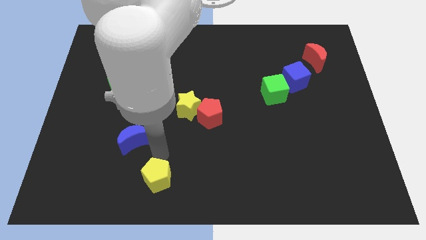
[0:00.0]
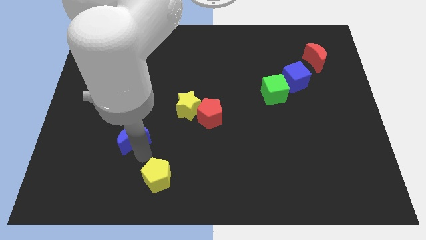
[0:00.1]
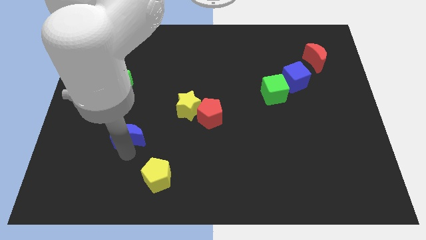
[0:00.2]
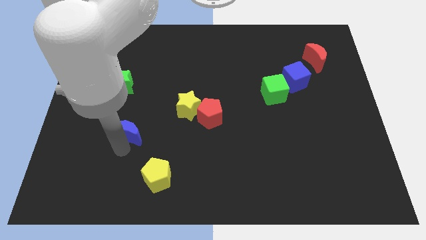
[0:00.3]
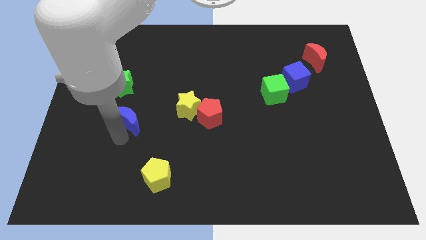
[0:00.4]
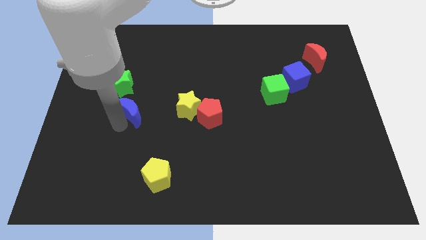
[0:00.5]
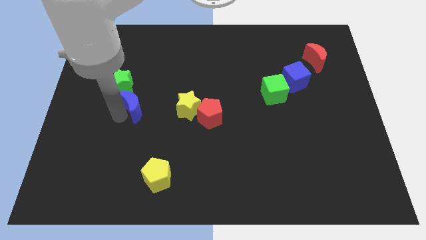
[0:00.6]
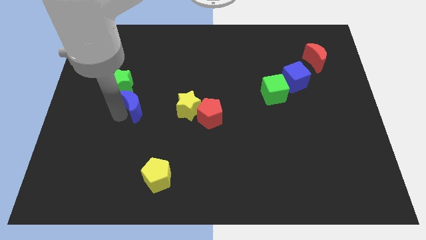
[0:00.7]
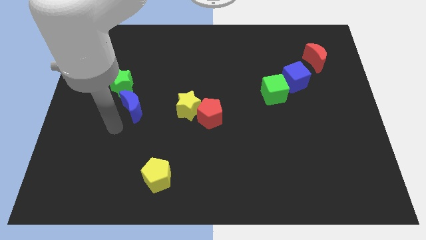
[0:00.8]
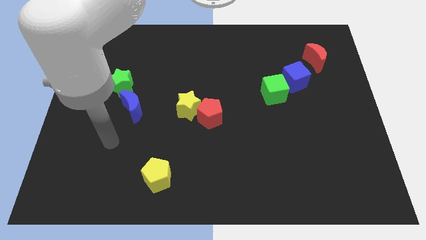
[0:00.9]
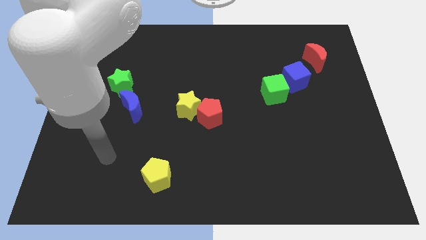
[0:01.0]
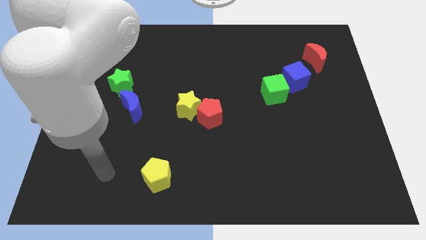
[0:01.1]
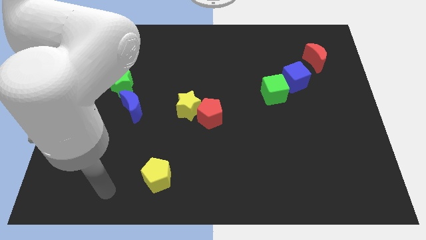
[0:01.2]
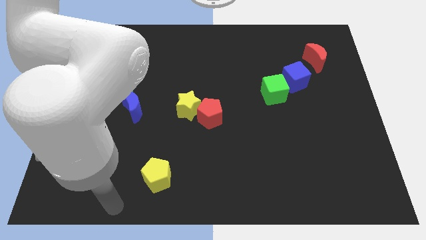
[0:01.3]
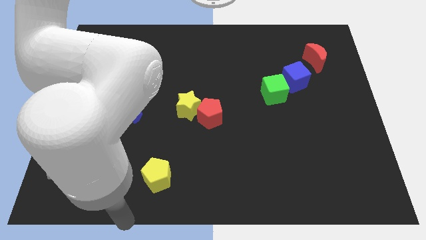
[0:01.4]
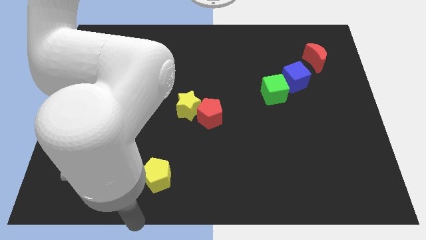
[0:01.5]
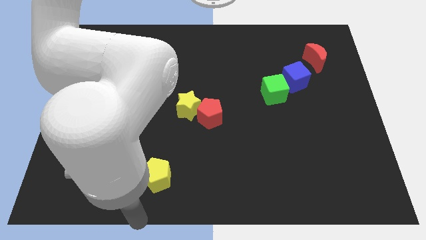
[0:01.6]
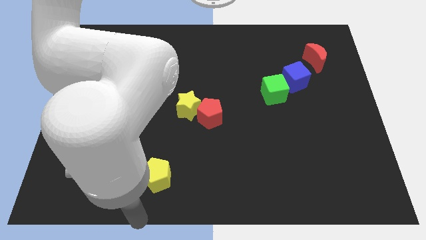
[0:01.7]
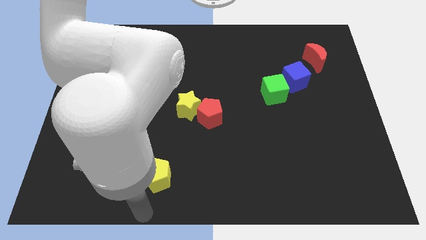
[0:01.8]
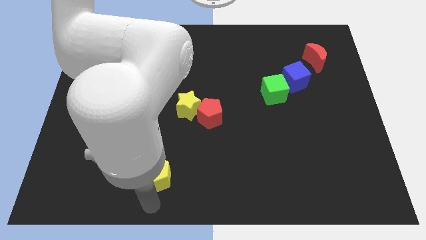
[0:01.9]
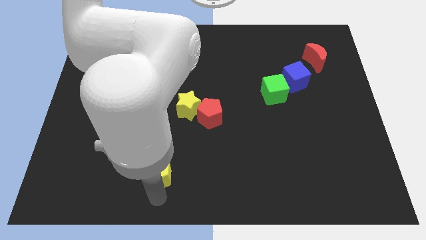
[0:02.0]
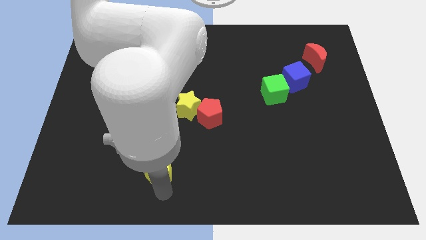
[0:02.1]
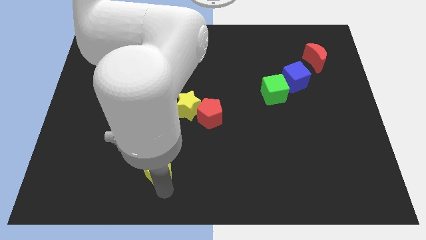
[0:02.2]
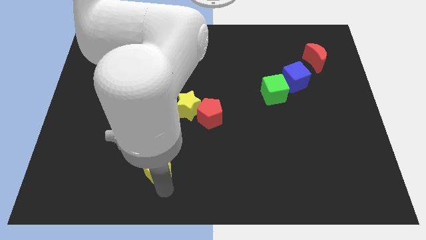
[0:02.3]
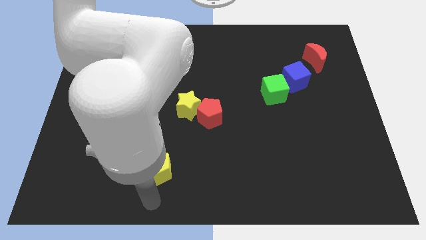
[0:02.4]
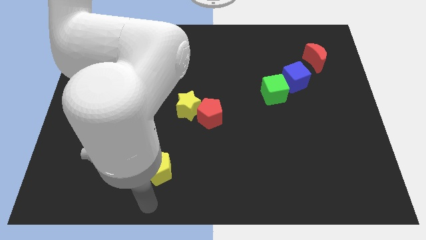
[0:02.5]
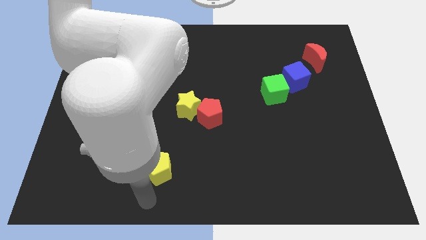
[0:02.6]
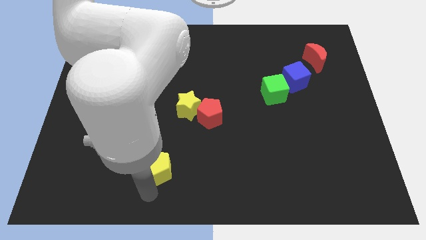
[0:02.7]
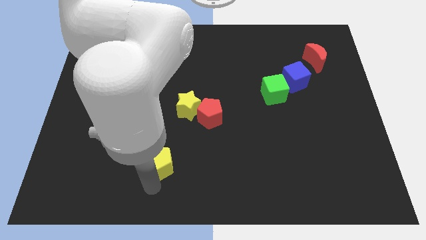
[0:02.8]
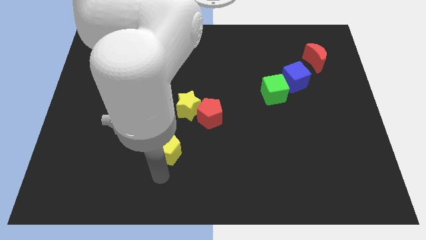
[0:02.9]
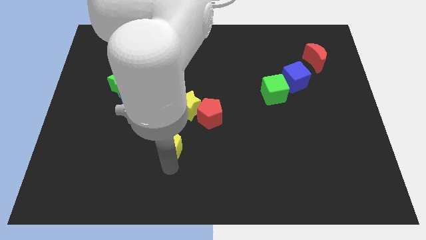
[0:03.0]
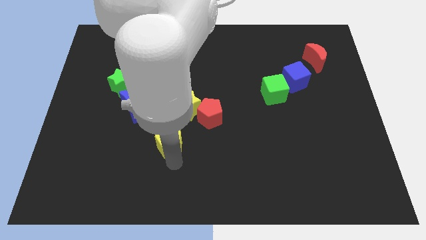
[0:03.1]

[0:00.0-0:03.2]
slide the blue crescent and yellow pentagon diagonally on the bottom right side of the green star

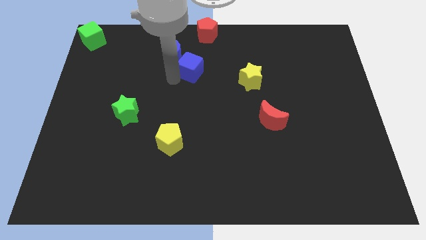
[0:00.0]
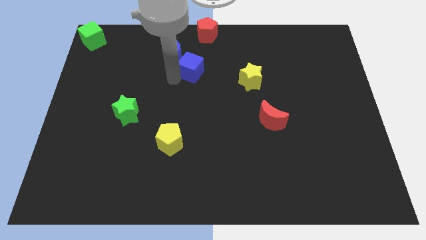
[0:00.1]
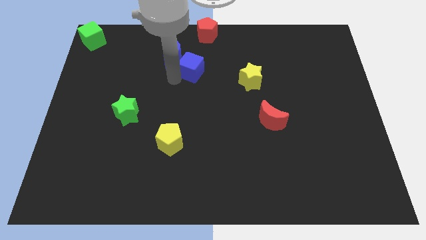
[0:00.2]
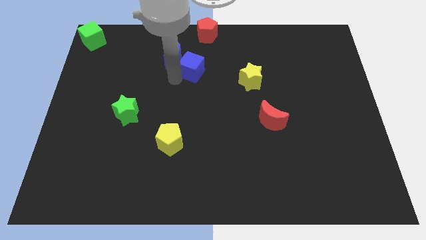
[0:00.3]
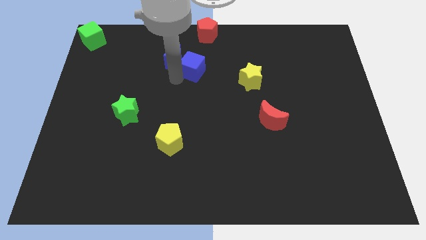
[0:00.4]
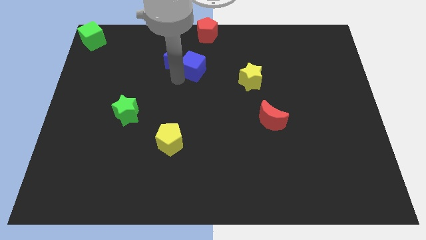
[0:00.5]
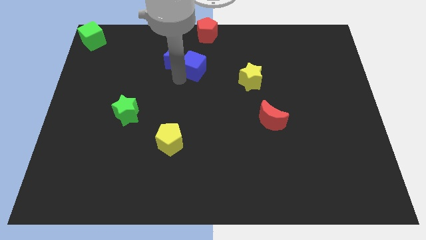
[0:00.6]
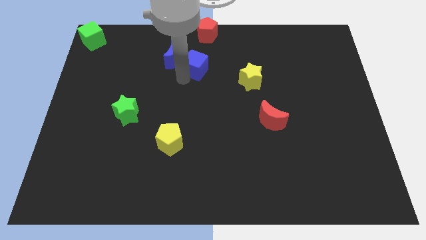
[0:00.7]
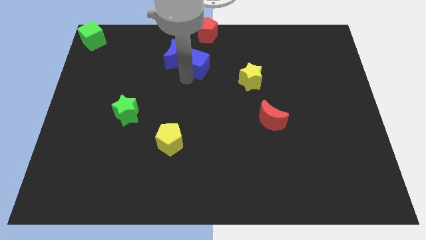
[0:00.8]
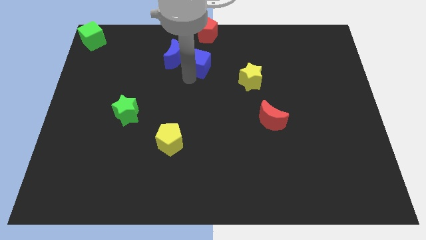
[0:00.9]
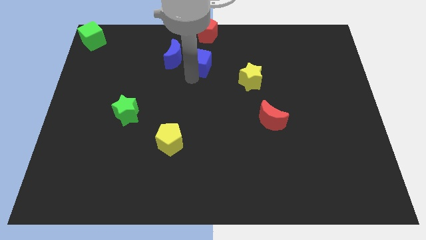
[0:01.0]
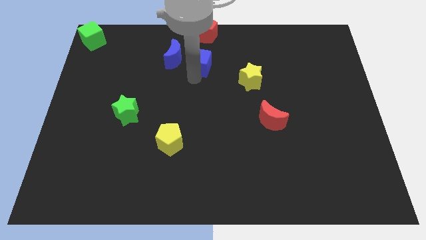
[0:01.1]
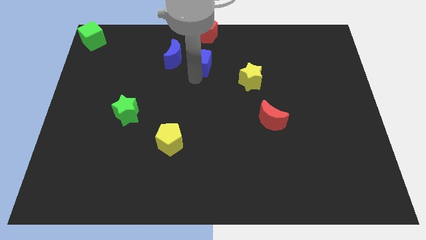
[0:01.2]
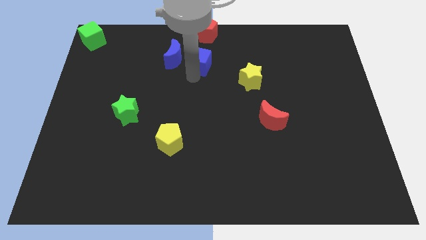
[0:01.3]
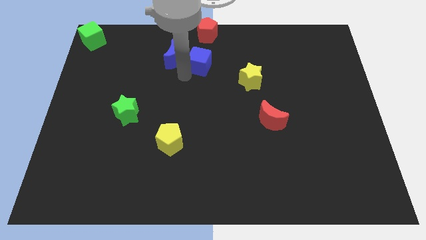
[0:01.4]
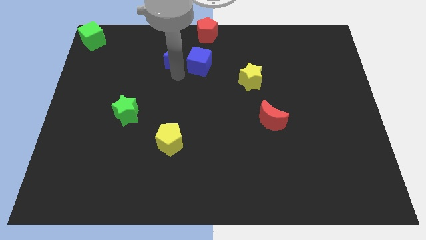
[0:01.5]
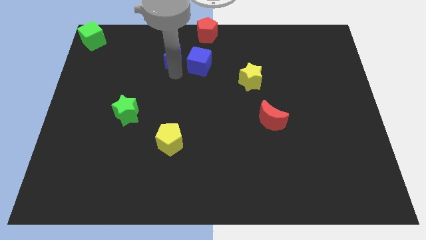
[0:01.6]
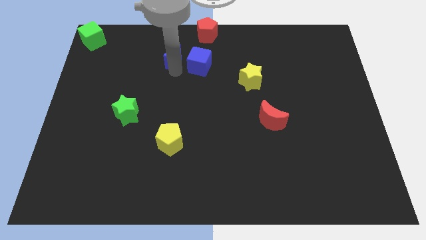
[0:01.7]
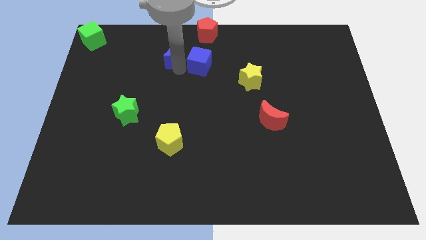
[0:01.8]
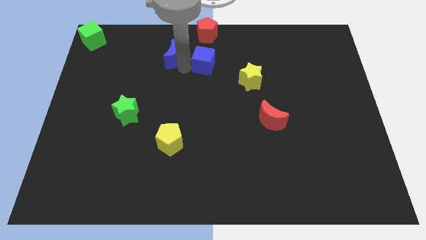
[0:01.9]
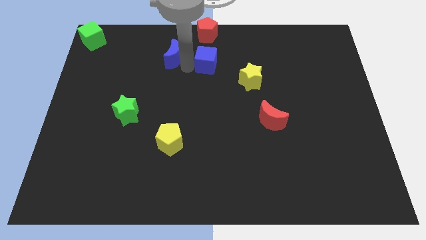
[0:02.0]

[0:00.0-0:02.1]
place the blue cube below red pentagon

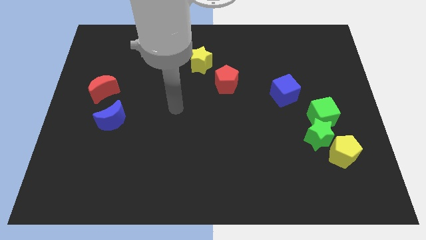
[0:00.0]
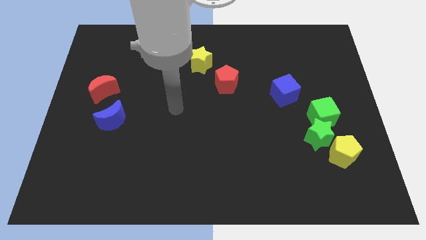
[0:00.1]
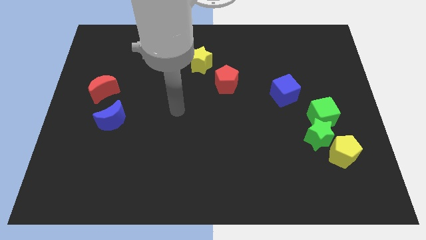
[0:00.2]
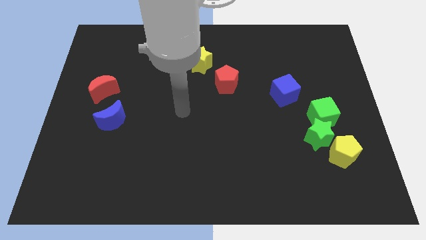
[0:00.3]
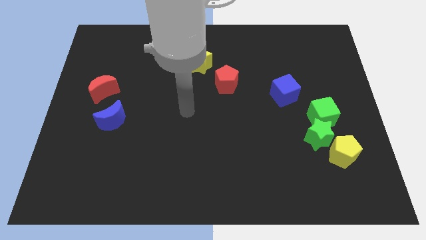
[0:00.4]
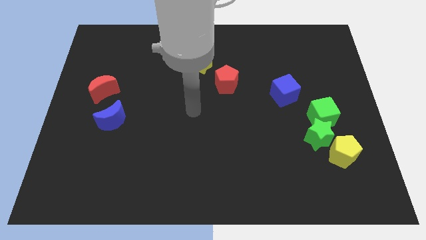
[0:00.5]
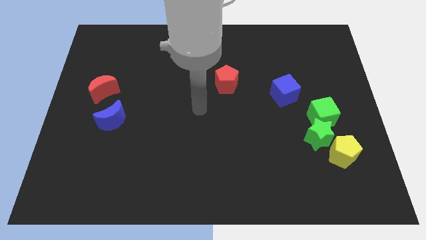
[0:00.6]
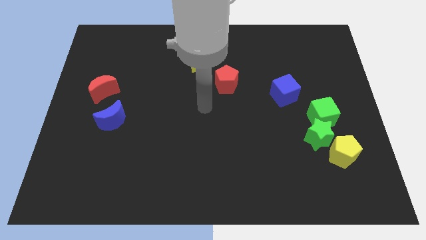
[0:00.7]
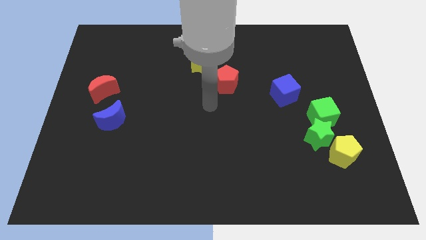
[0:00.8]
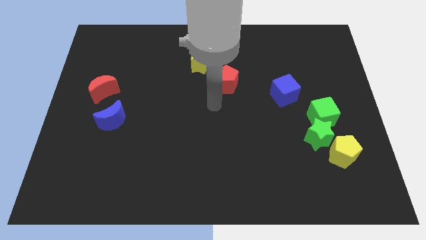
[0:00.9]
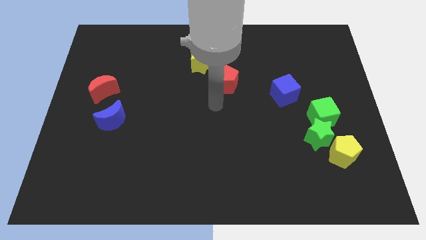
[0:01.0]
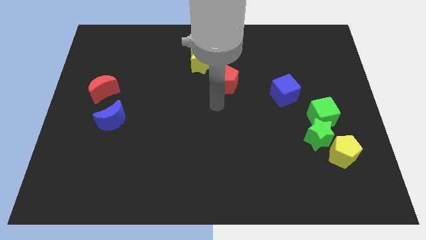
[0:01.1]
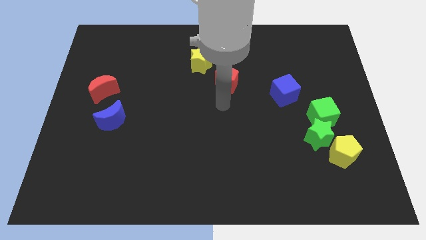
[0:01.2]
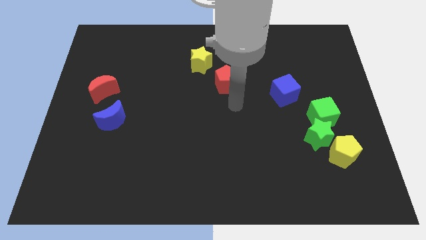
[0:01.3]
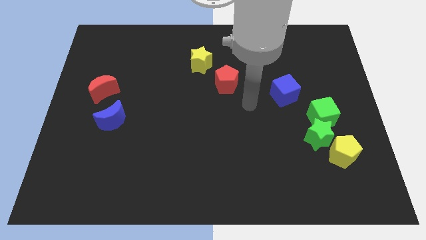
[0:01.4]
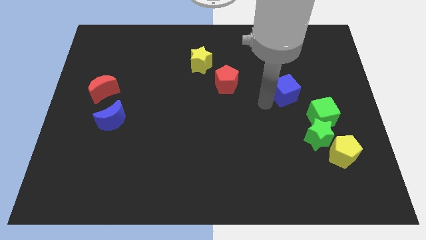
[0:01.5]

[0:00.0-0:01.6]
move your hand towards the right

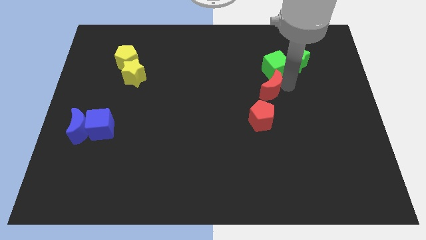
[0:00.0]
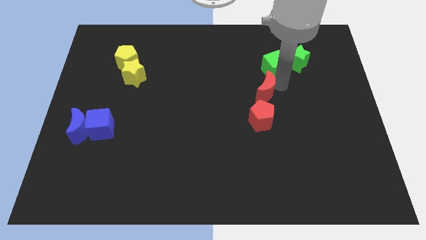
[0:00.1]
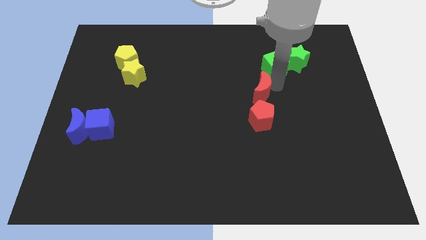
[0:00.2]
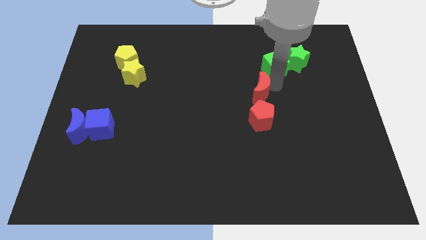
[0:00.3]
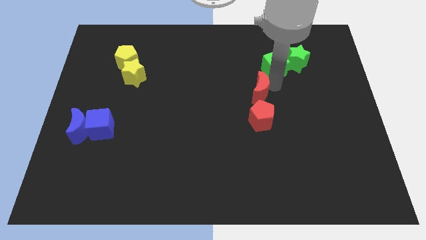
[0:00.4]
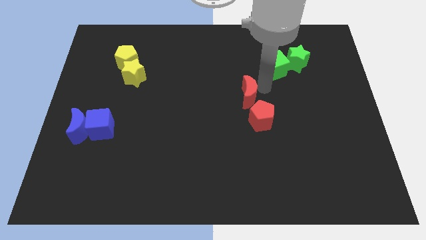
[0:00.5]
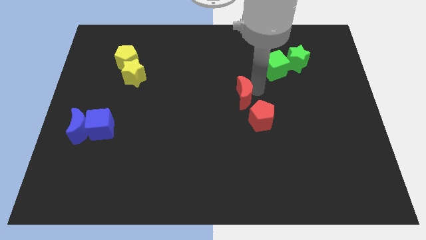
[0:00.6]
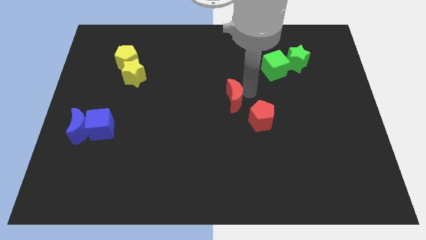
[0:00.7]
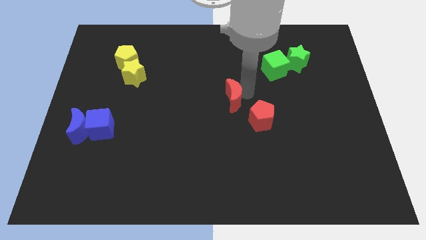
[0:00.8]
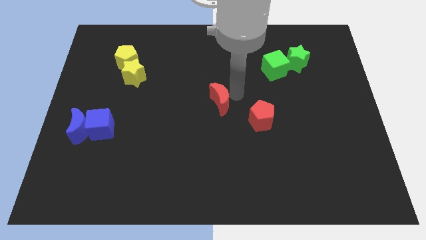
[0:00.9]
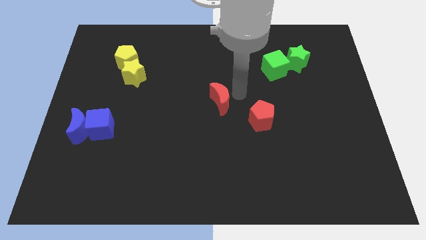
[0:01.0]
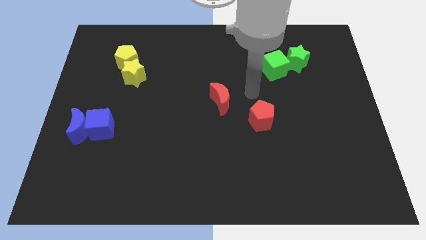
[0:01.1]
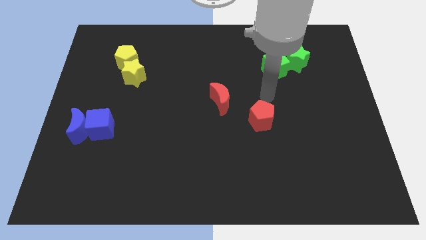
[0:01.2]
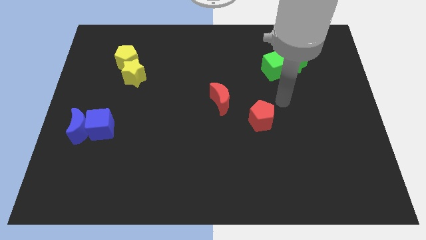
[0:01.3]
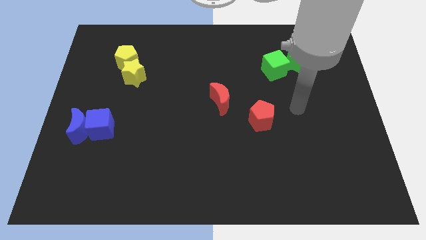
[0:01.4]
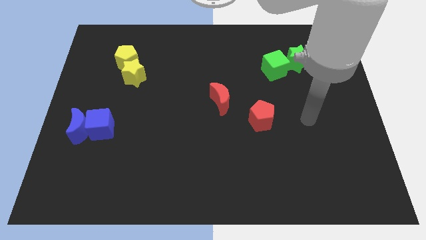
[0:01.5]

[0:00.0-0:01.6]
move red moon to the middle of the board

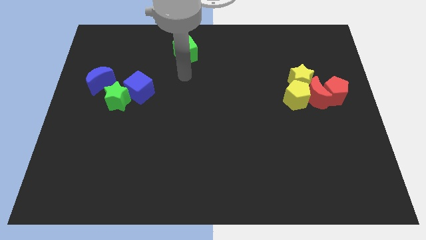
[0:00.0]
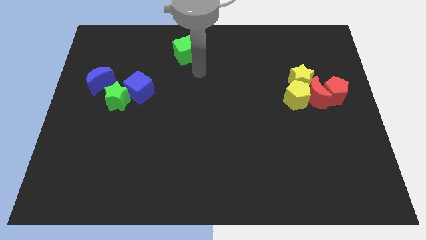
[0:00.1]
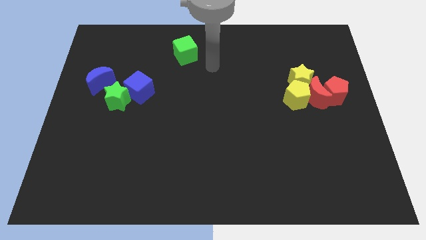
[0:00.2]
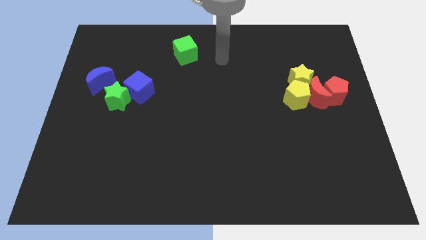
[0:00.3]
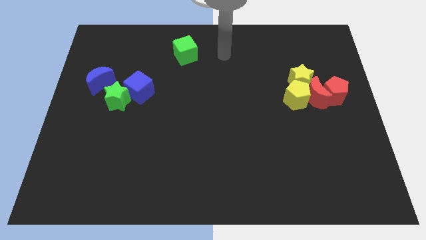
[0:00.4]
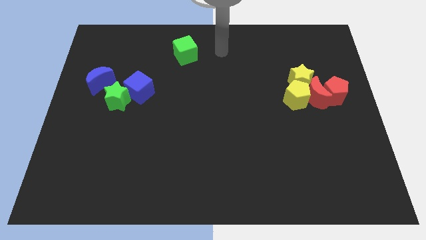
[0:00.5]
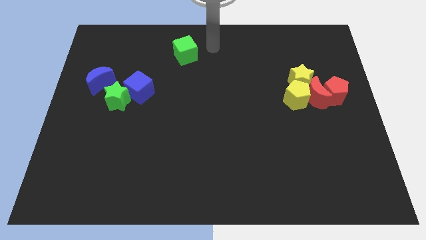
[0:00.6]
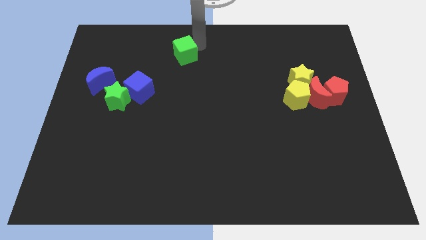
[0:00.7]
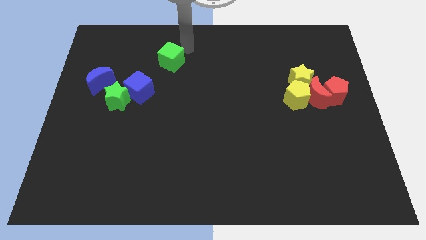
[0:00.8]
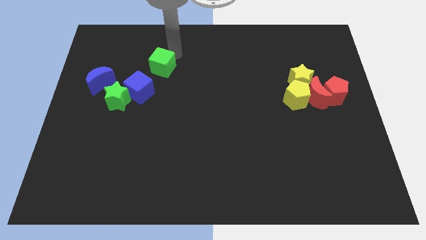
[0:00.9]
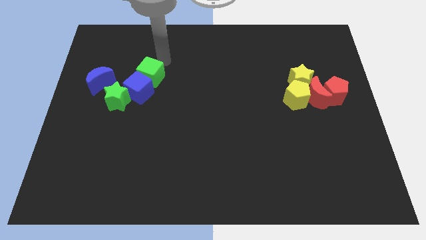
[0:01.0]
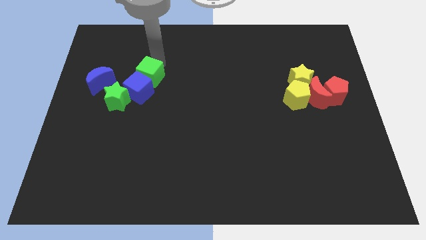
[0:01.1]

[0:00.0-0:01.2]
move the green cube above the blue cube
